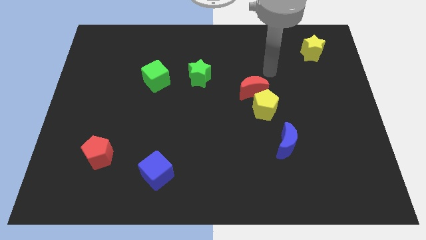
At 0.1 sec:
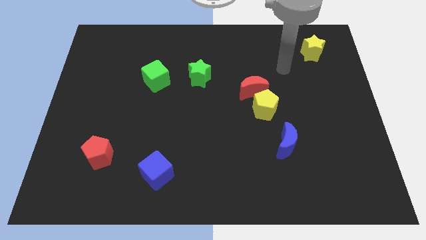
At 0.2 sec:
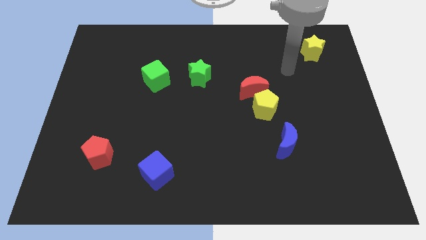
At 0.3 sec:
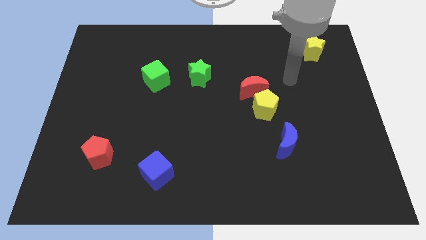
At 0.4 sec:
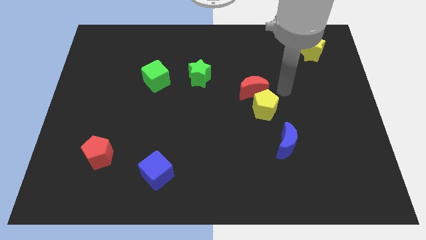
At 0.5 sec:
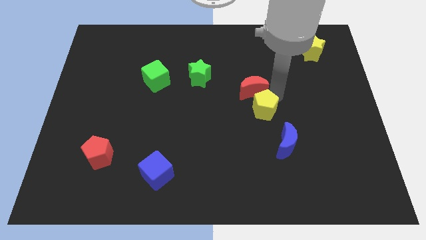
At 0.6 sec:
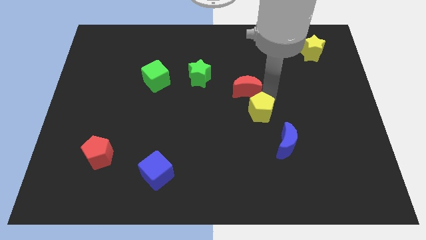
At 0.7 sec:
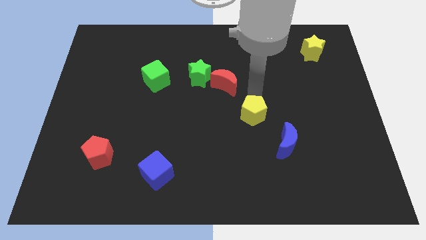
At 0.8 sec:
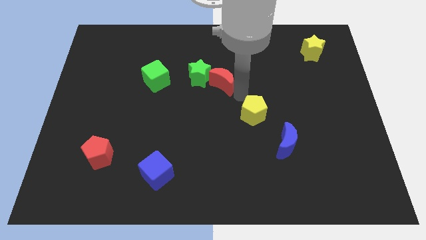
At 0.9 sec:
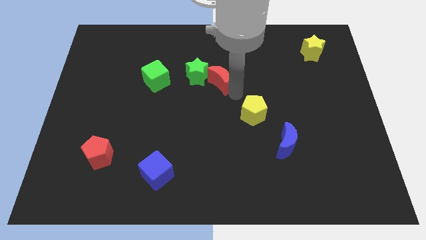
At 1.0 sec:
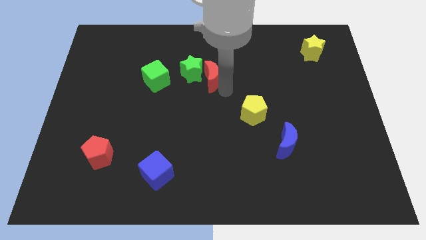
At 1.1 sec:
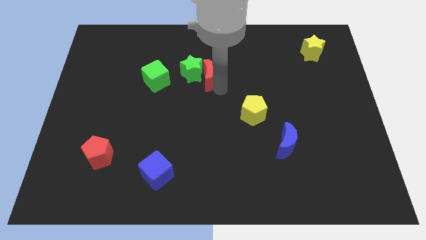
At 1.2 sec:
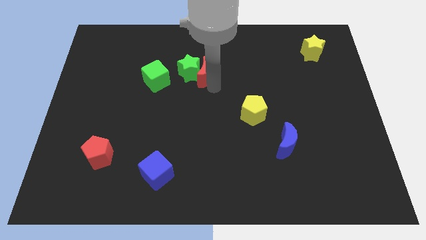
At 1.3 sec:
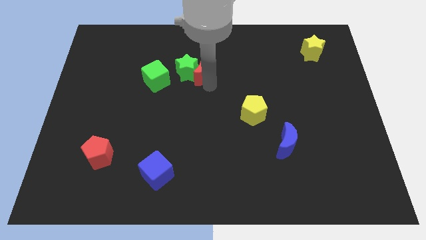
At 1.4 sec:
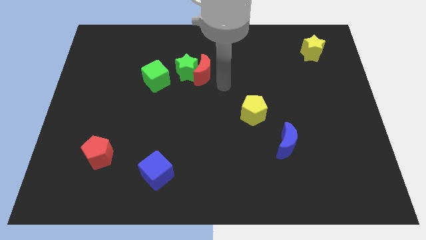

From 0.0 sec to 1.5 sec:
push red crescent close to green star

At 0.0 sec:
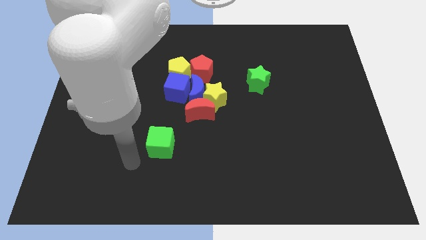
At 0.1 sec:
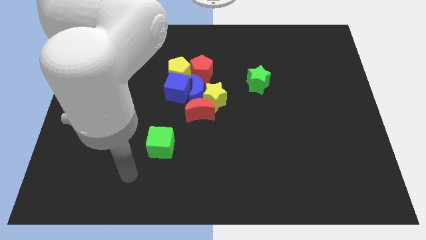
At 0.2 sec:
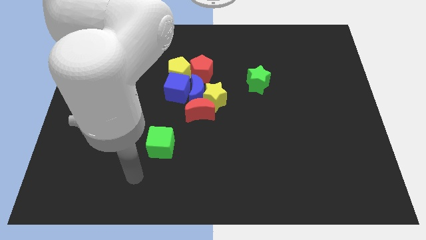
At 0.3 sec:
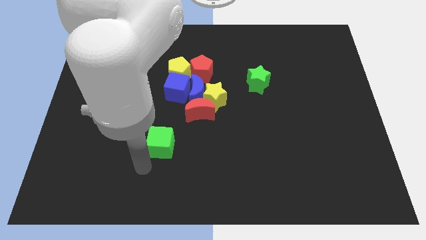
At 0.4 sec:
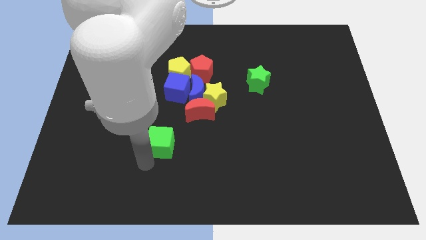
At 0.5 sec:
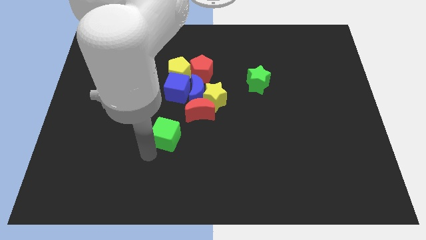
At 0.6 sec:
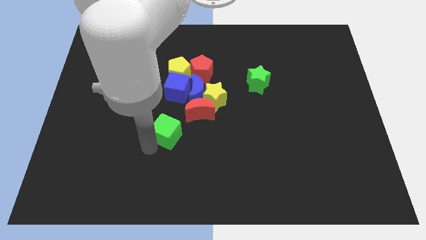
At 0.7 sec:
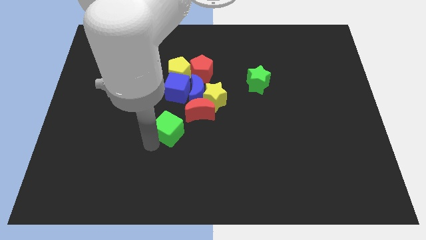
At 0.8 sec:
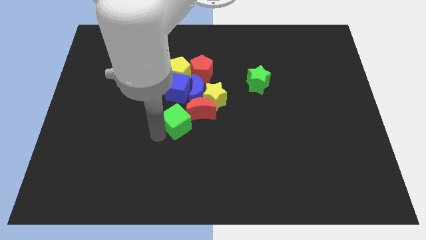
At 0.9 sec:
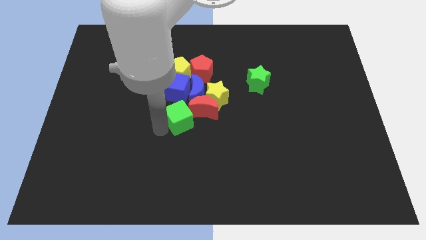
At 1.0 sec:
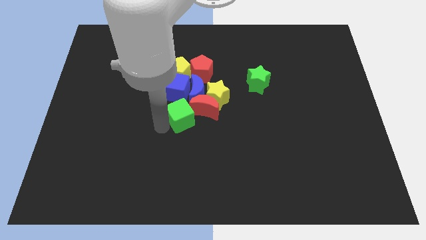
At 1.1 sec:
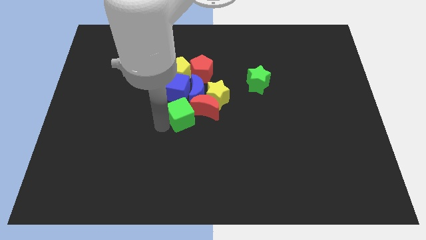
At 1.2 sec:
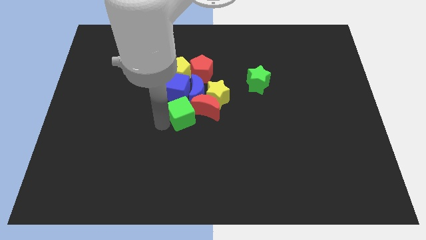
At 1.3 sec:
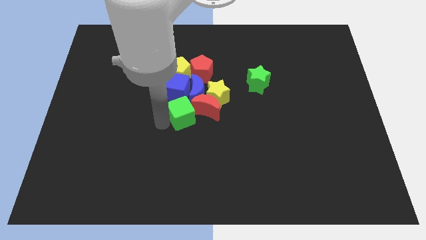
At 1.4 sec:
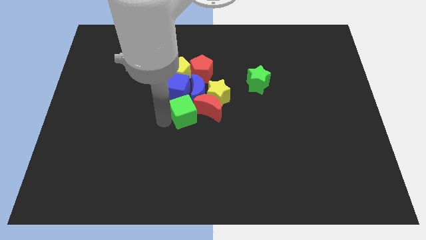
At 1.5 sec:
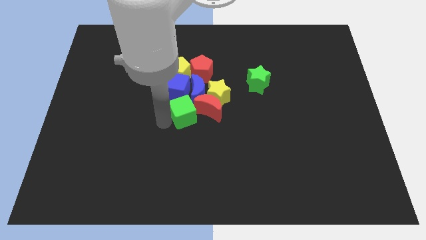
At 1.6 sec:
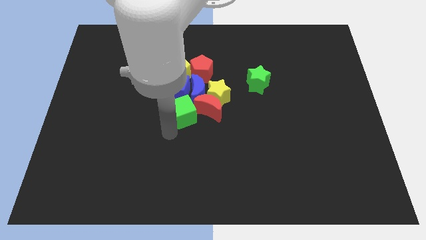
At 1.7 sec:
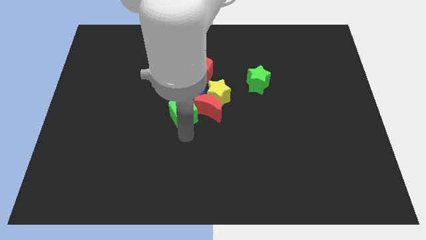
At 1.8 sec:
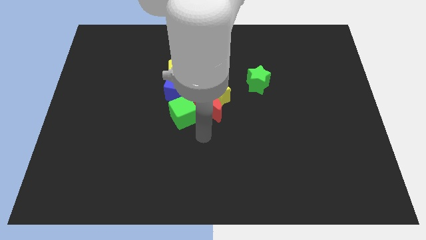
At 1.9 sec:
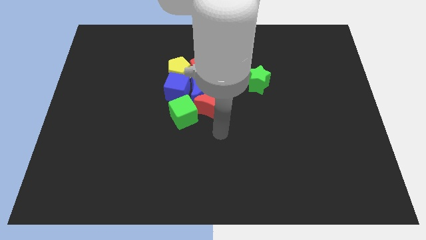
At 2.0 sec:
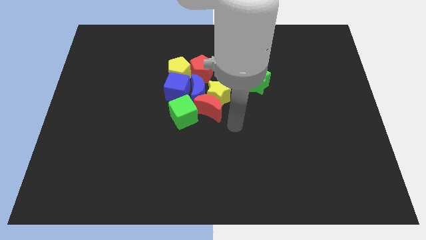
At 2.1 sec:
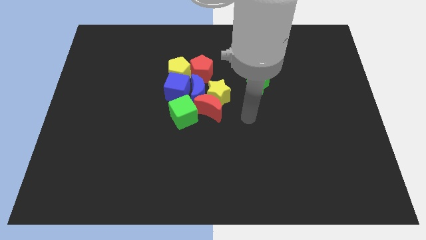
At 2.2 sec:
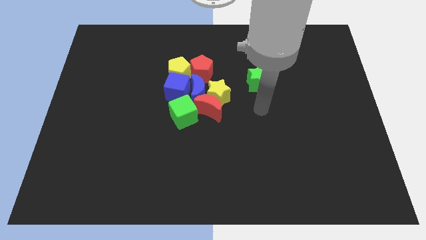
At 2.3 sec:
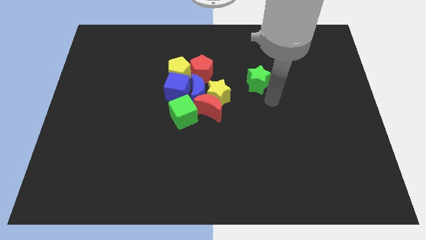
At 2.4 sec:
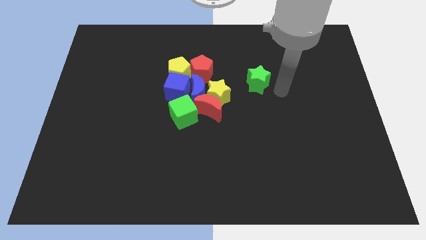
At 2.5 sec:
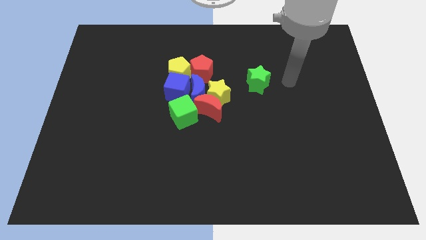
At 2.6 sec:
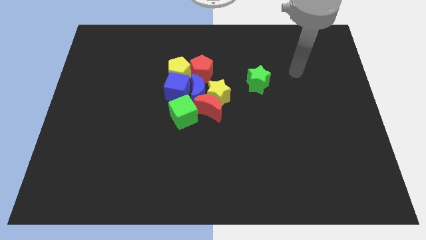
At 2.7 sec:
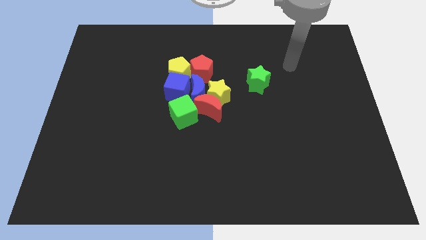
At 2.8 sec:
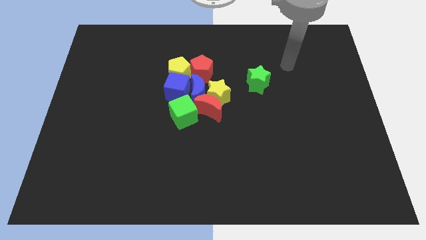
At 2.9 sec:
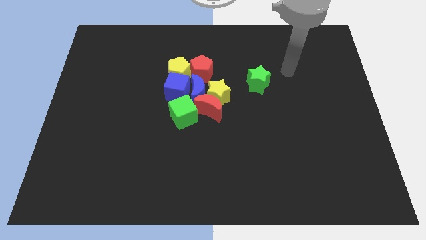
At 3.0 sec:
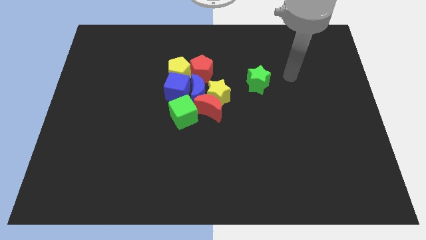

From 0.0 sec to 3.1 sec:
push green cube into group of blocks

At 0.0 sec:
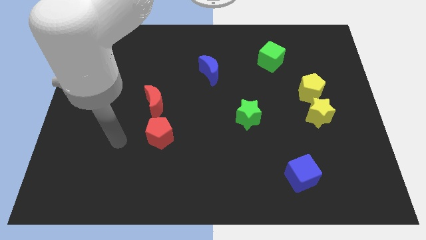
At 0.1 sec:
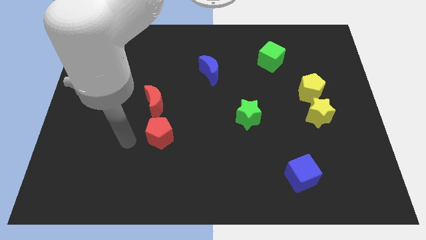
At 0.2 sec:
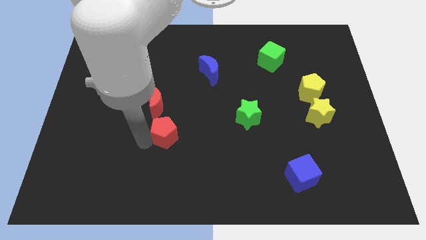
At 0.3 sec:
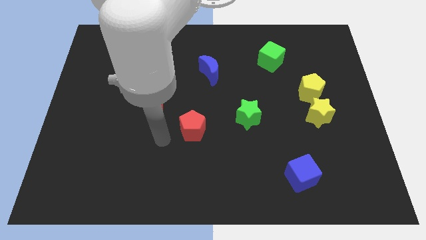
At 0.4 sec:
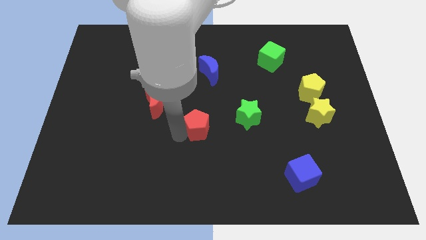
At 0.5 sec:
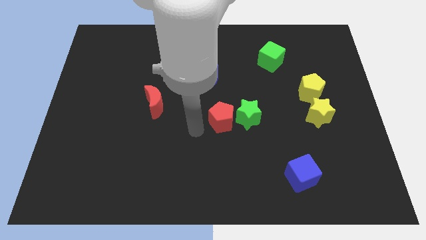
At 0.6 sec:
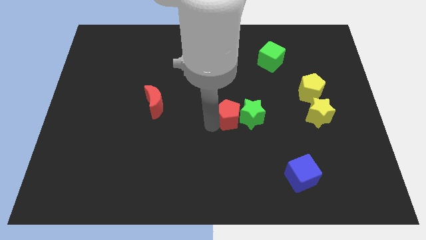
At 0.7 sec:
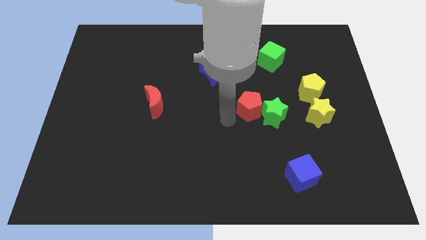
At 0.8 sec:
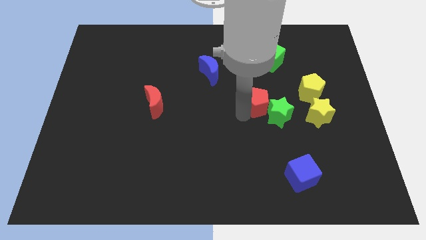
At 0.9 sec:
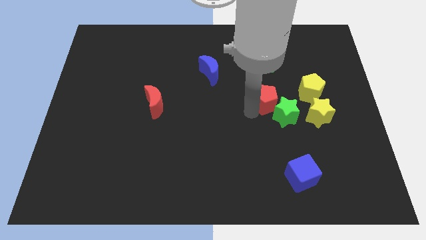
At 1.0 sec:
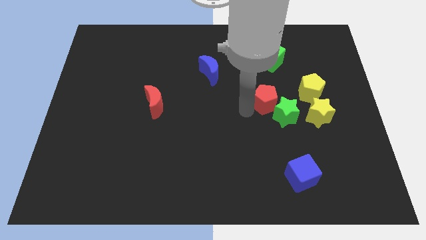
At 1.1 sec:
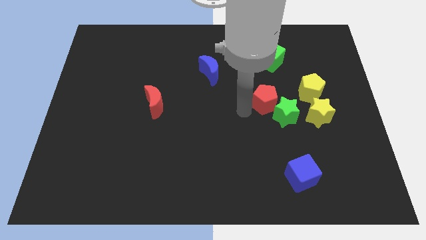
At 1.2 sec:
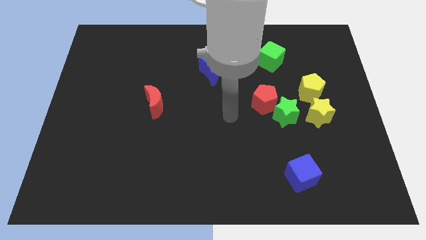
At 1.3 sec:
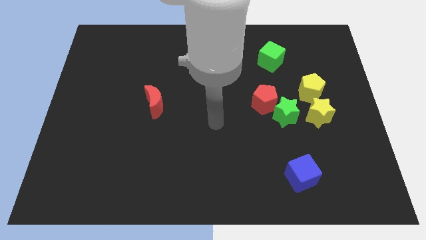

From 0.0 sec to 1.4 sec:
move the red pentagon above the green star

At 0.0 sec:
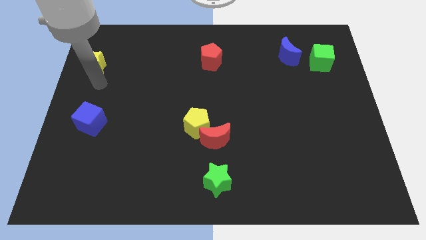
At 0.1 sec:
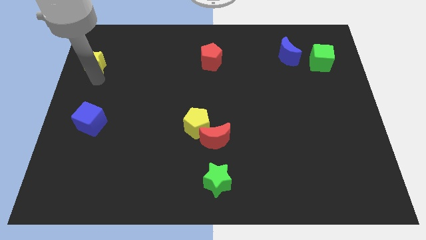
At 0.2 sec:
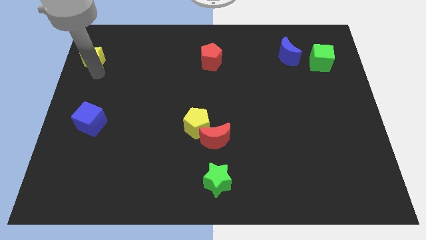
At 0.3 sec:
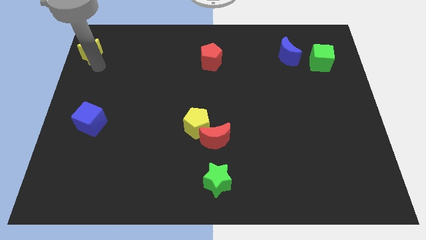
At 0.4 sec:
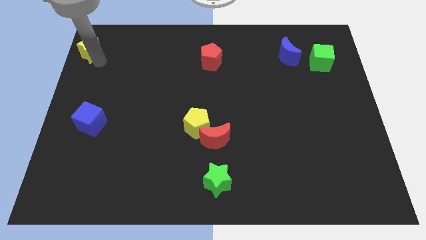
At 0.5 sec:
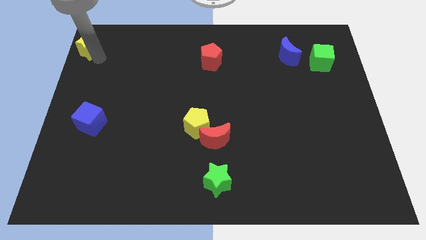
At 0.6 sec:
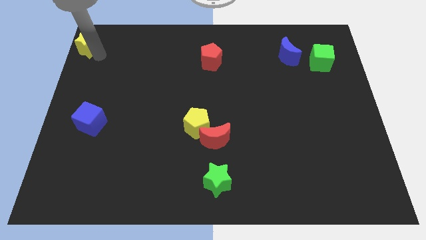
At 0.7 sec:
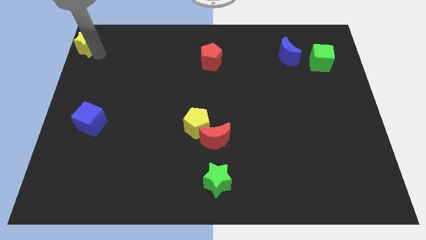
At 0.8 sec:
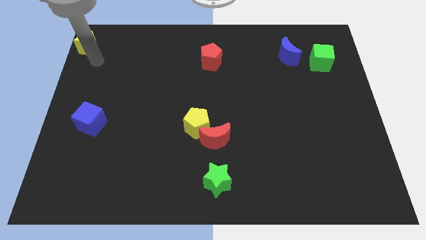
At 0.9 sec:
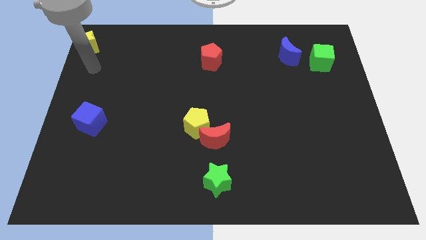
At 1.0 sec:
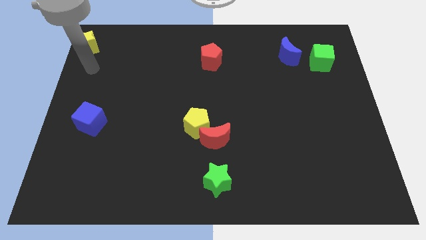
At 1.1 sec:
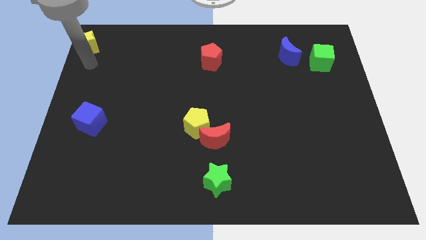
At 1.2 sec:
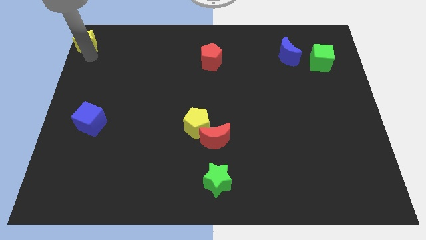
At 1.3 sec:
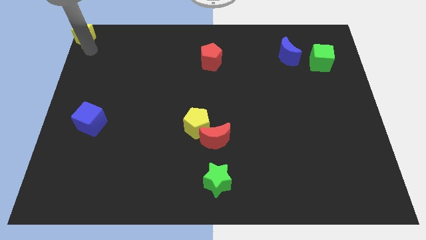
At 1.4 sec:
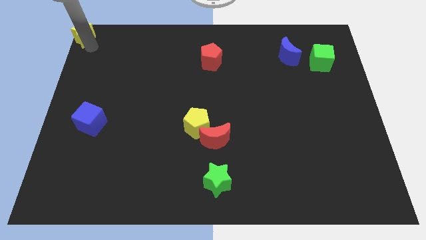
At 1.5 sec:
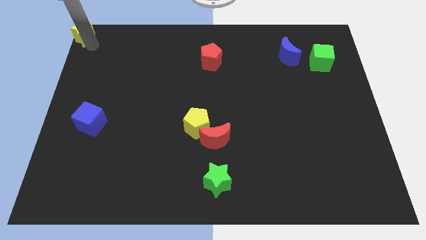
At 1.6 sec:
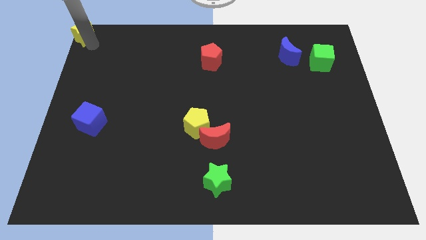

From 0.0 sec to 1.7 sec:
push the yellow star to the top left corner of the board

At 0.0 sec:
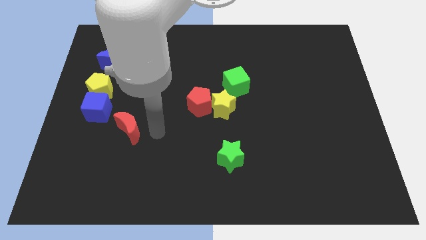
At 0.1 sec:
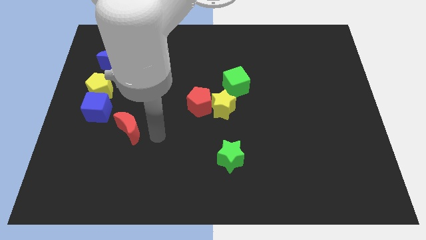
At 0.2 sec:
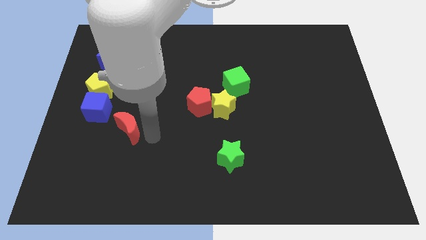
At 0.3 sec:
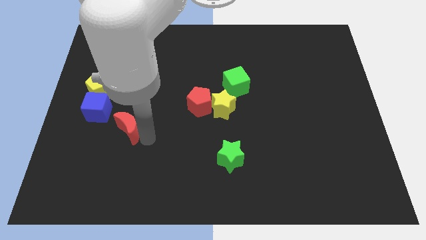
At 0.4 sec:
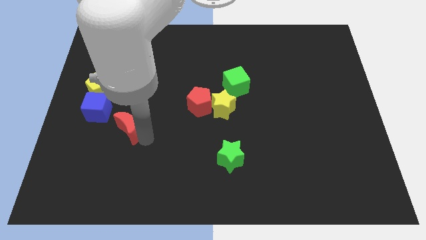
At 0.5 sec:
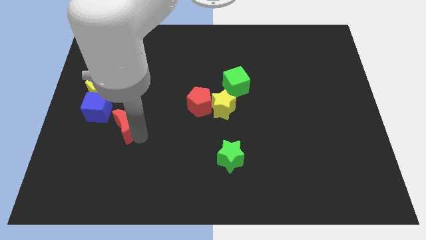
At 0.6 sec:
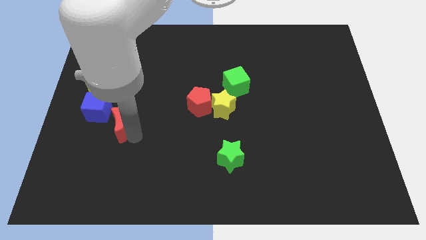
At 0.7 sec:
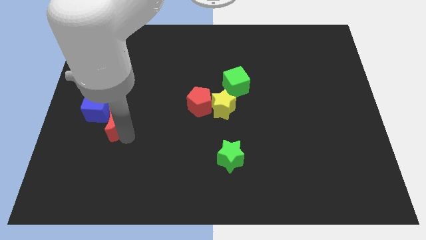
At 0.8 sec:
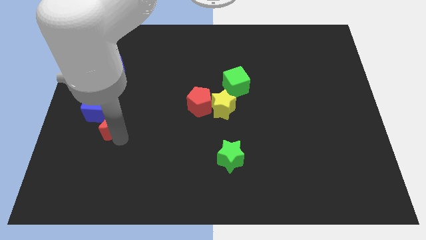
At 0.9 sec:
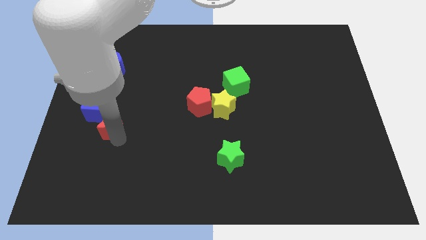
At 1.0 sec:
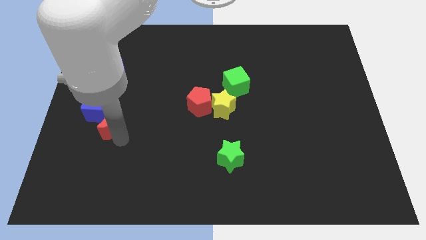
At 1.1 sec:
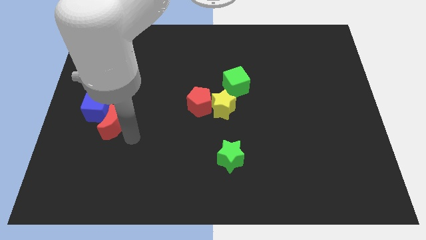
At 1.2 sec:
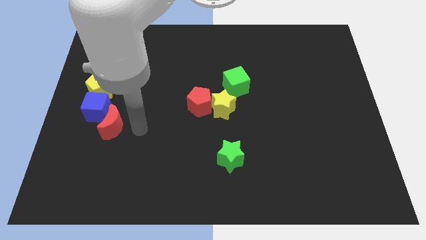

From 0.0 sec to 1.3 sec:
move the red crescent to the bottom right of the blue cube
